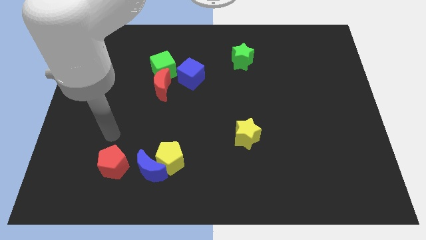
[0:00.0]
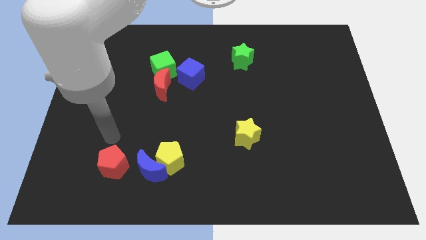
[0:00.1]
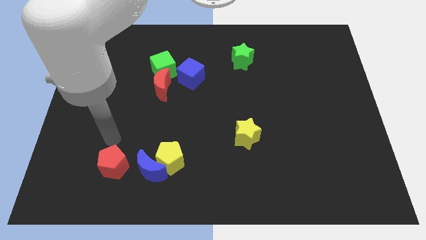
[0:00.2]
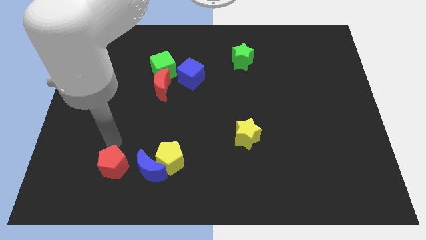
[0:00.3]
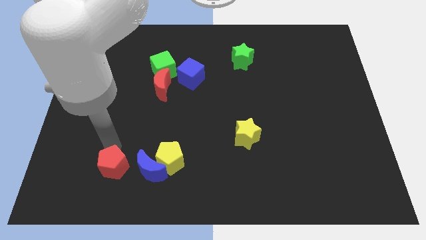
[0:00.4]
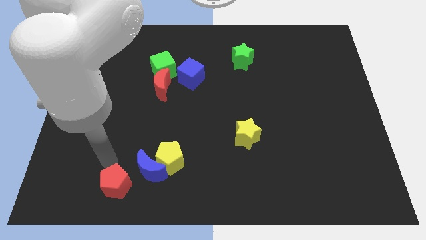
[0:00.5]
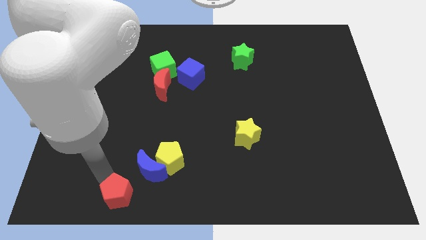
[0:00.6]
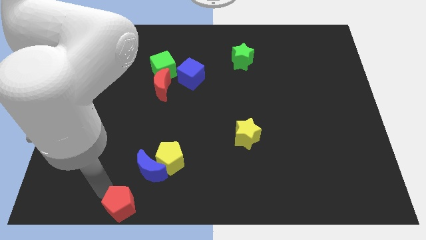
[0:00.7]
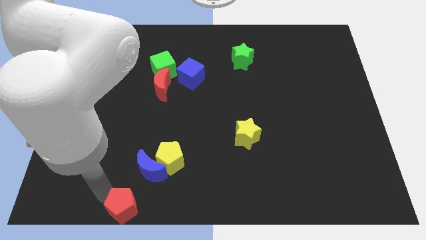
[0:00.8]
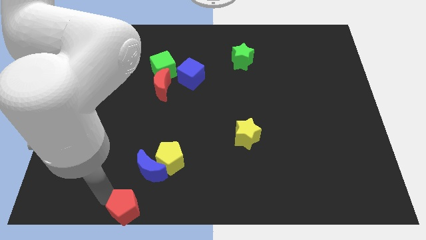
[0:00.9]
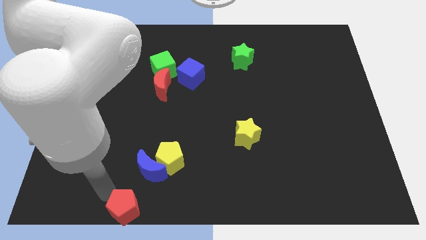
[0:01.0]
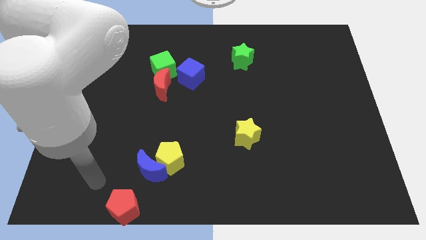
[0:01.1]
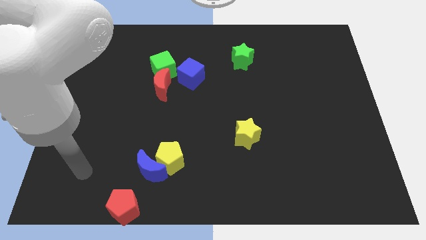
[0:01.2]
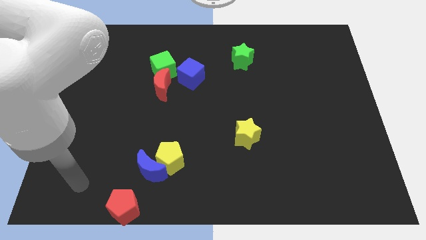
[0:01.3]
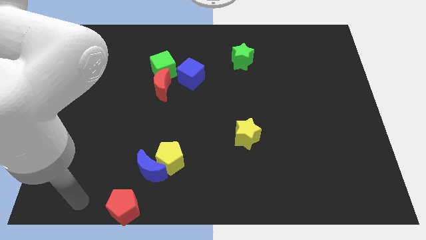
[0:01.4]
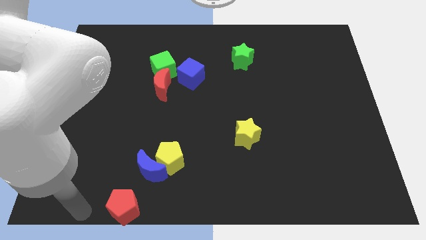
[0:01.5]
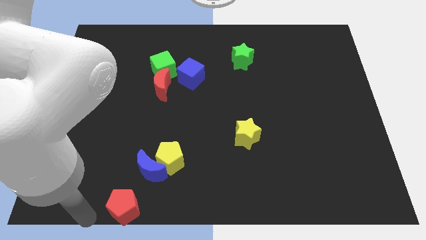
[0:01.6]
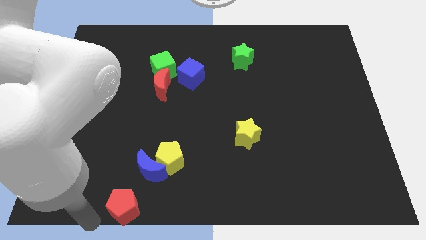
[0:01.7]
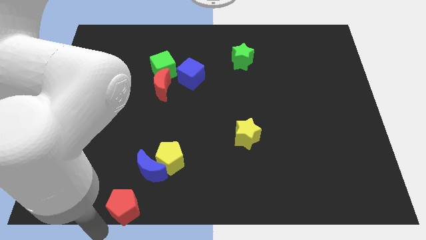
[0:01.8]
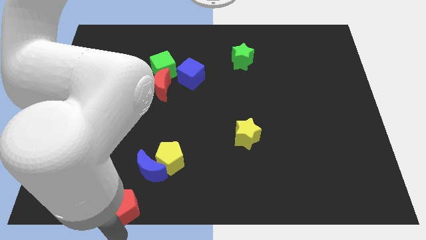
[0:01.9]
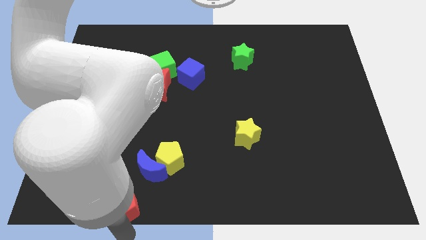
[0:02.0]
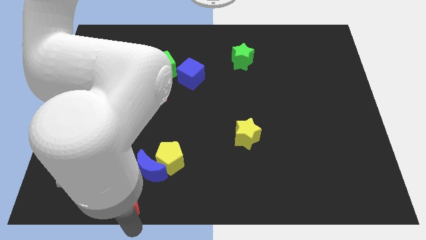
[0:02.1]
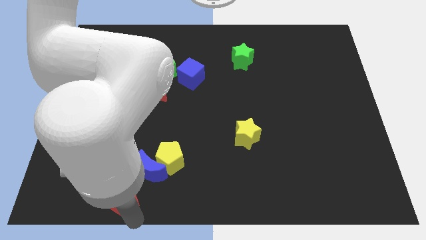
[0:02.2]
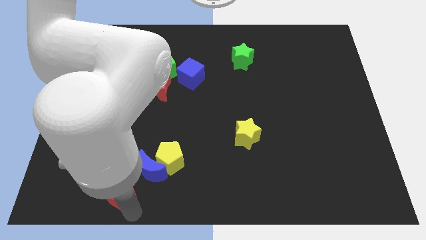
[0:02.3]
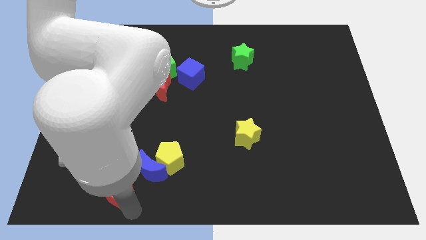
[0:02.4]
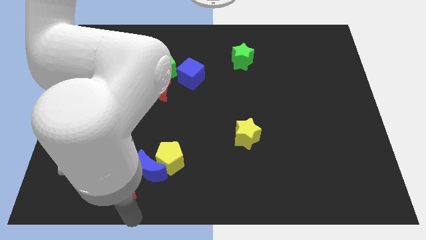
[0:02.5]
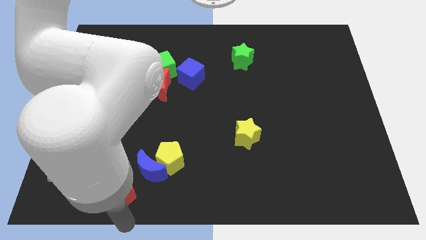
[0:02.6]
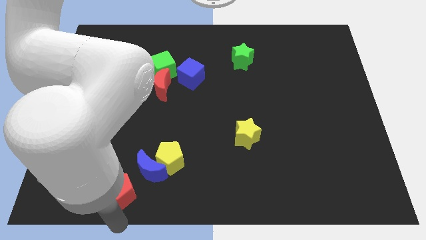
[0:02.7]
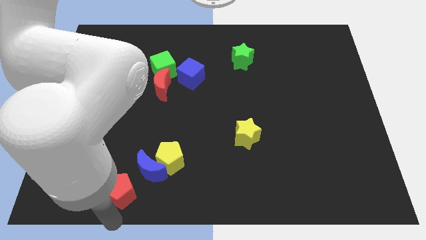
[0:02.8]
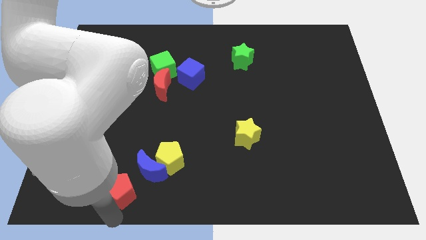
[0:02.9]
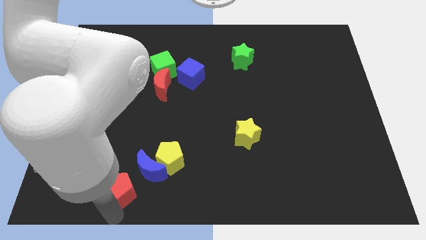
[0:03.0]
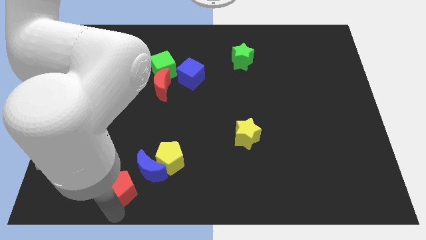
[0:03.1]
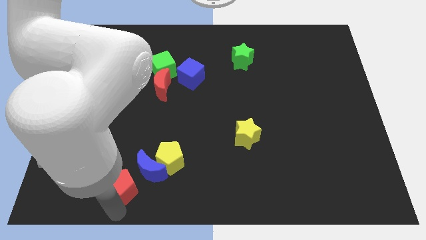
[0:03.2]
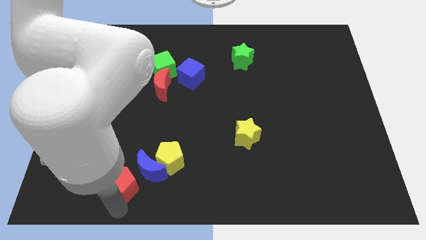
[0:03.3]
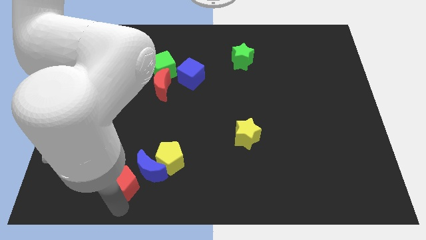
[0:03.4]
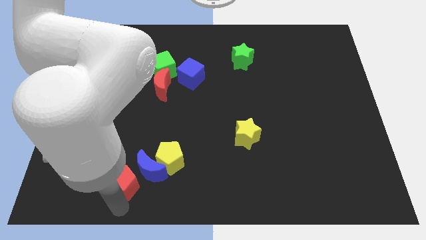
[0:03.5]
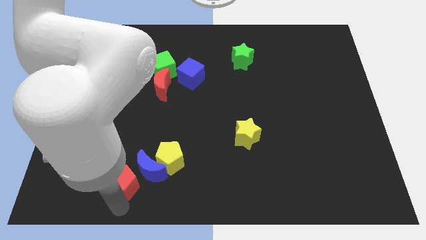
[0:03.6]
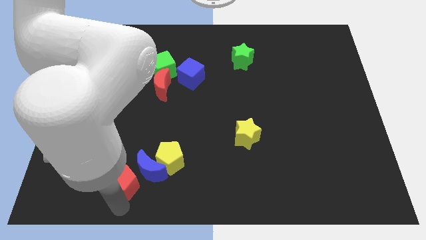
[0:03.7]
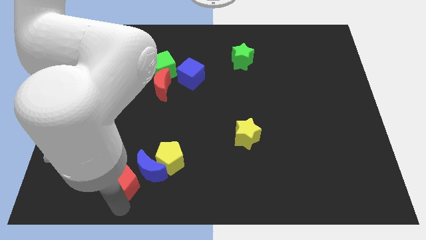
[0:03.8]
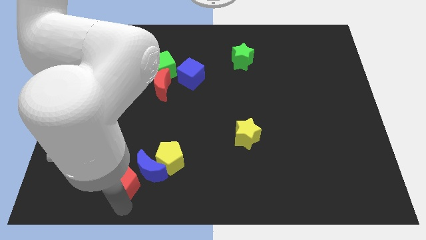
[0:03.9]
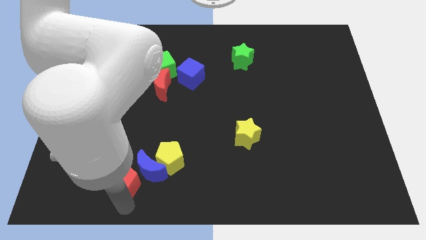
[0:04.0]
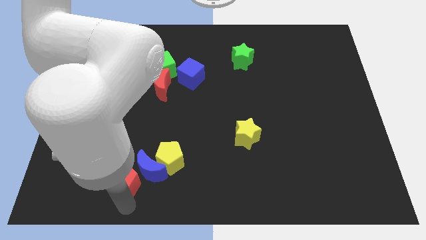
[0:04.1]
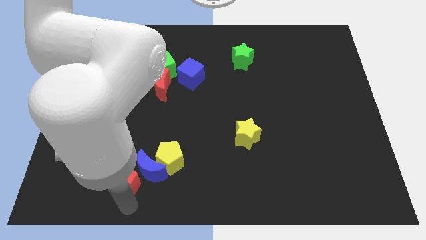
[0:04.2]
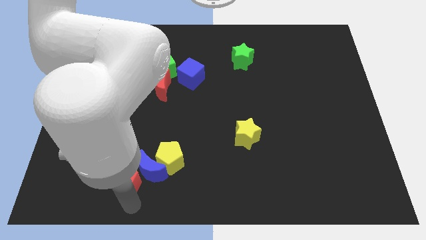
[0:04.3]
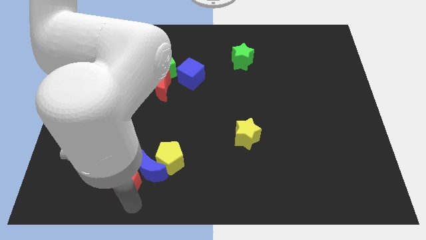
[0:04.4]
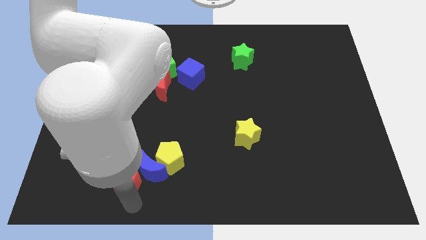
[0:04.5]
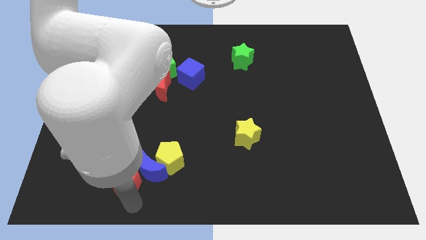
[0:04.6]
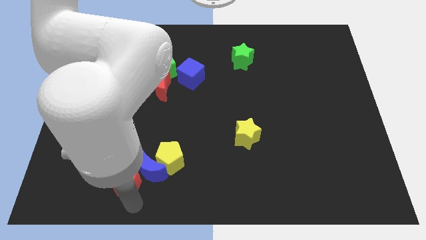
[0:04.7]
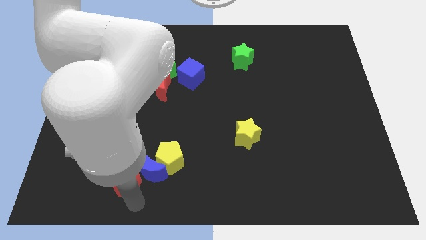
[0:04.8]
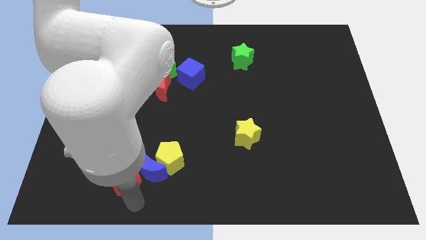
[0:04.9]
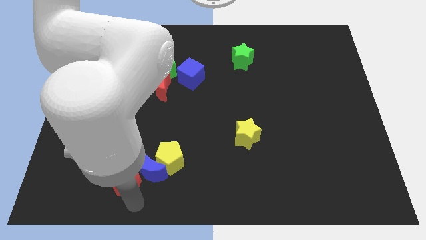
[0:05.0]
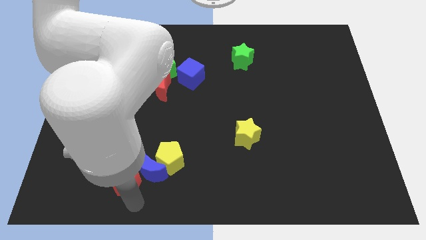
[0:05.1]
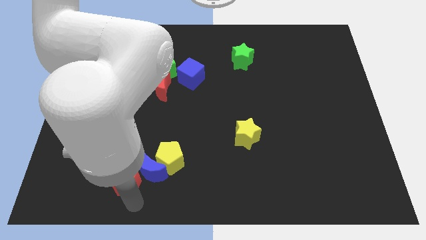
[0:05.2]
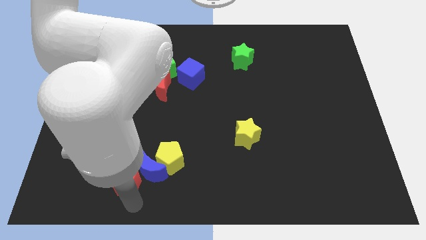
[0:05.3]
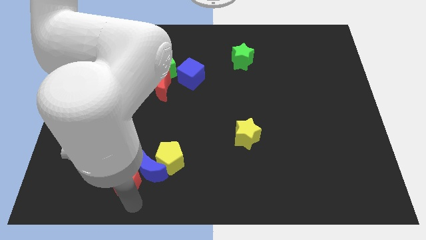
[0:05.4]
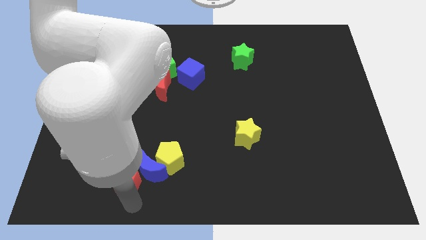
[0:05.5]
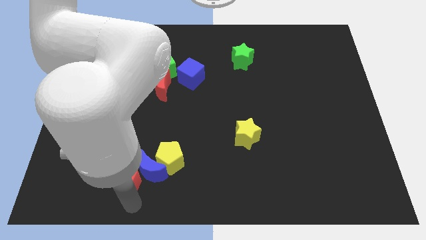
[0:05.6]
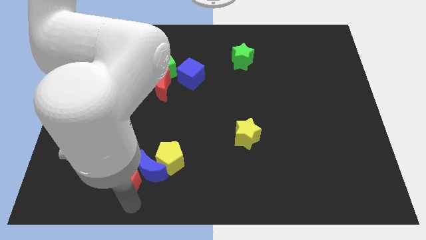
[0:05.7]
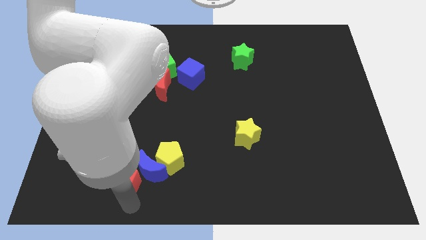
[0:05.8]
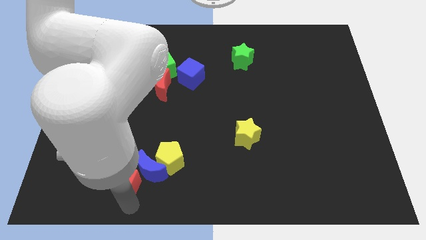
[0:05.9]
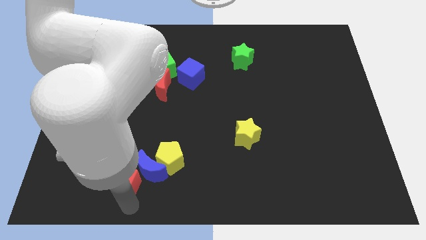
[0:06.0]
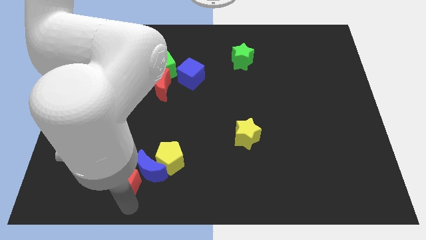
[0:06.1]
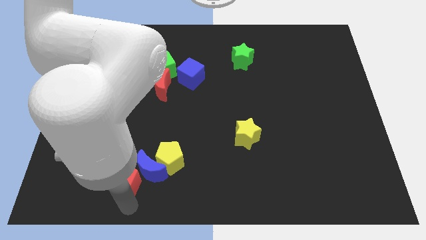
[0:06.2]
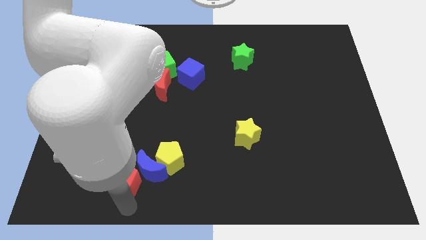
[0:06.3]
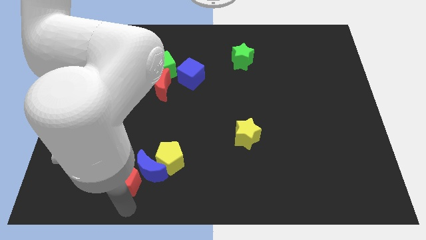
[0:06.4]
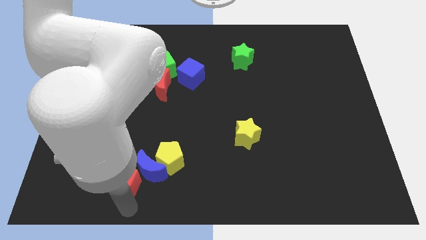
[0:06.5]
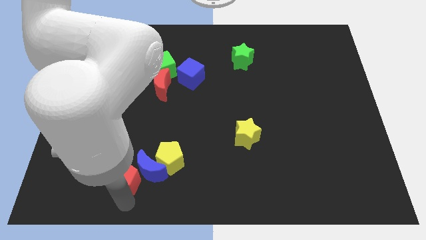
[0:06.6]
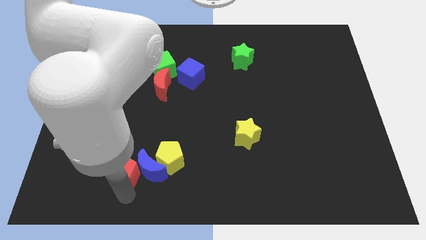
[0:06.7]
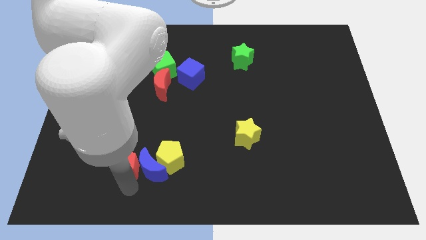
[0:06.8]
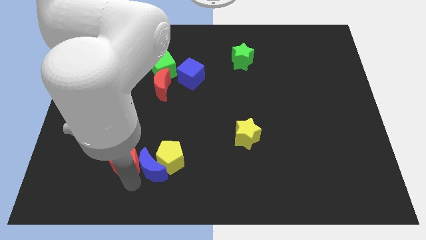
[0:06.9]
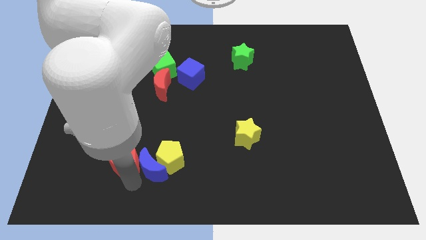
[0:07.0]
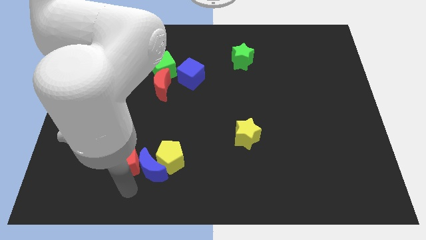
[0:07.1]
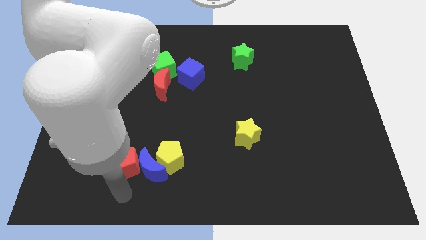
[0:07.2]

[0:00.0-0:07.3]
move the red pentagon left to the blue crescent

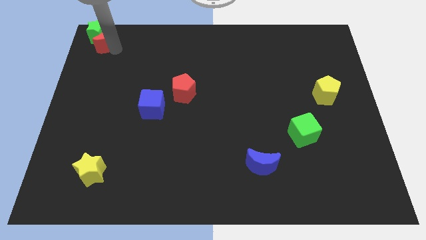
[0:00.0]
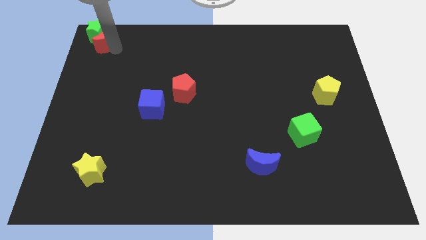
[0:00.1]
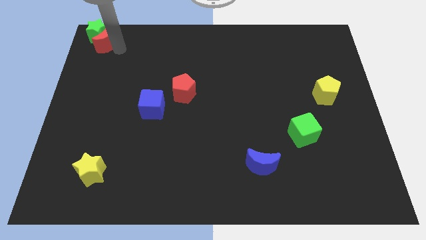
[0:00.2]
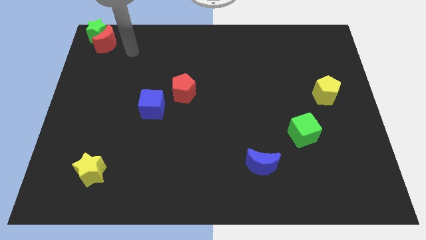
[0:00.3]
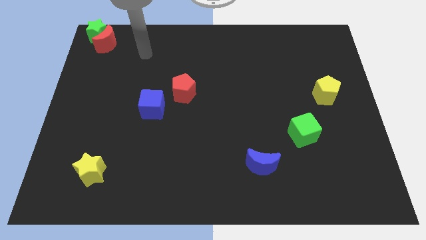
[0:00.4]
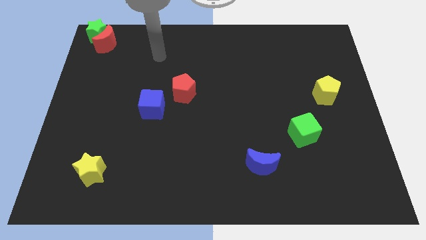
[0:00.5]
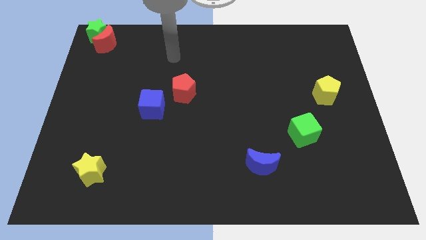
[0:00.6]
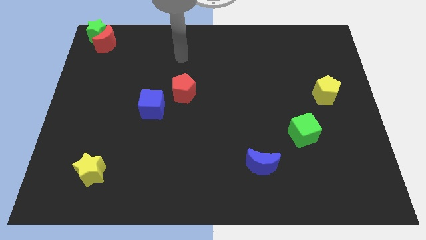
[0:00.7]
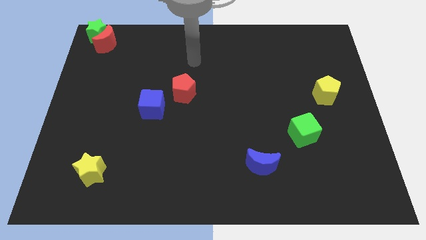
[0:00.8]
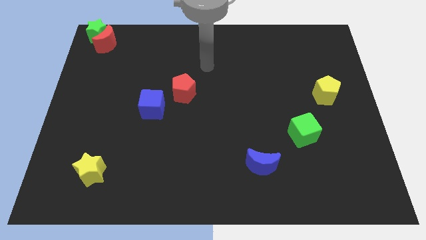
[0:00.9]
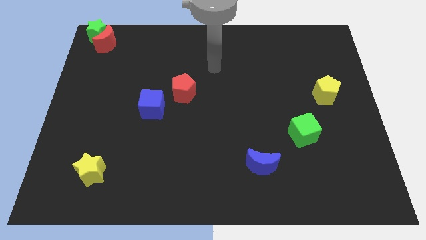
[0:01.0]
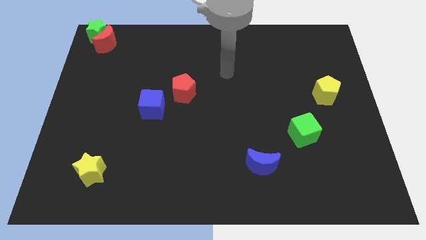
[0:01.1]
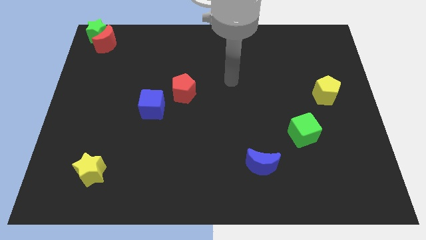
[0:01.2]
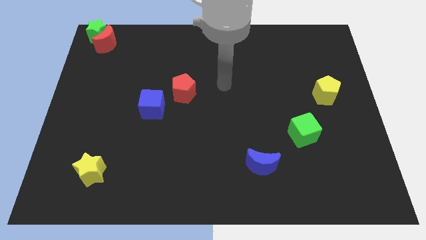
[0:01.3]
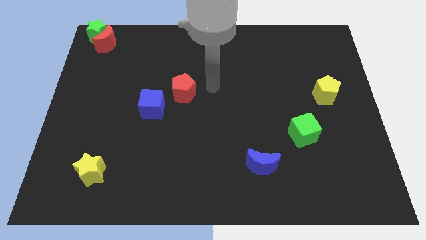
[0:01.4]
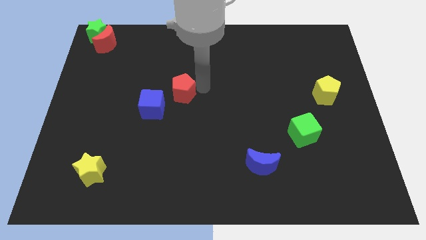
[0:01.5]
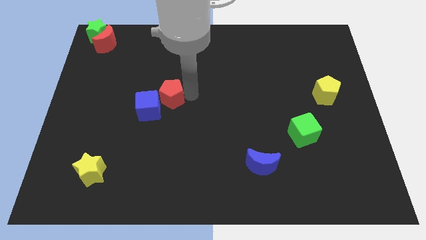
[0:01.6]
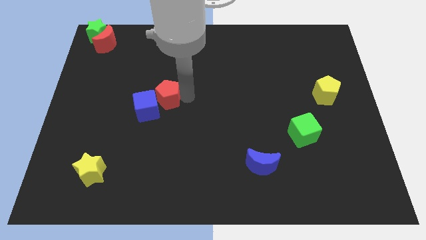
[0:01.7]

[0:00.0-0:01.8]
move arm near red pentagon
